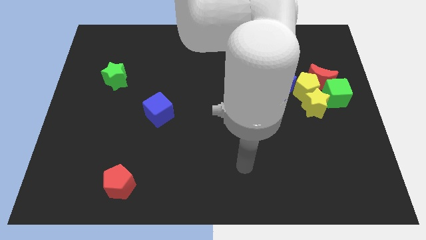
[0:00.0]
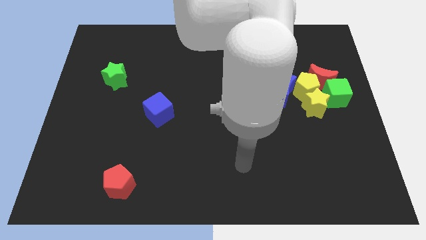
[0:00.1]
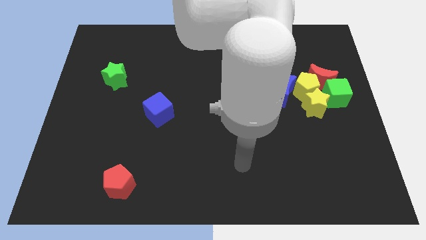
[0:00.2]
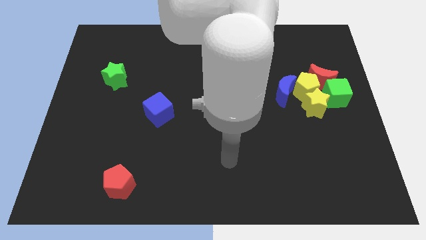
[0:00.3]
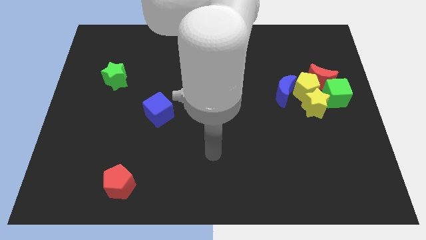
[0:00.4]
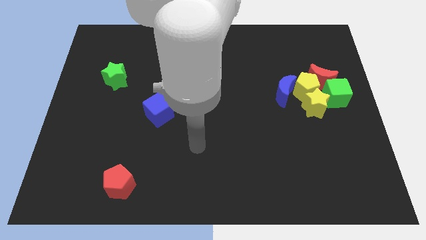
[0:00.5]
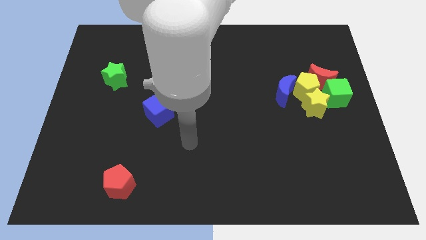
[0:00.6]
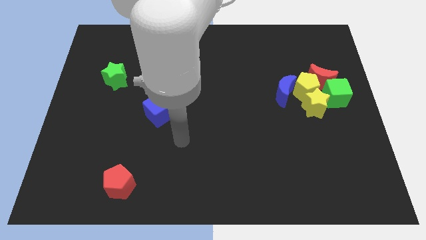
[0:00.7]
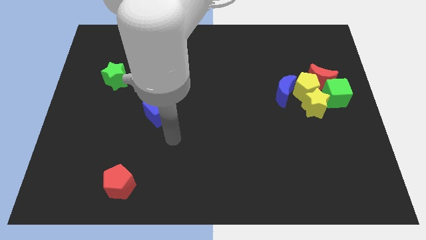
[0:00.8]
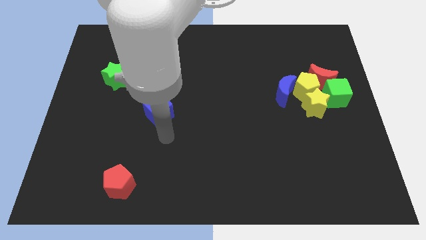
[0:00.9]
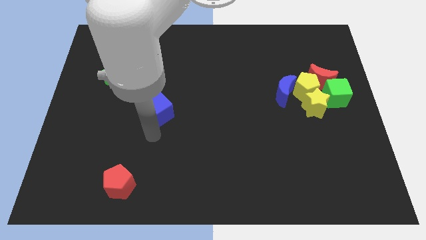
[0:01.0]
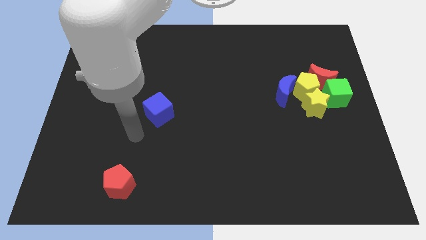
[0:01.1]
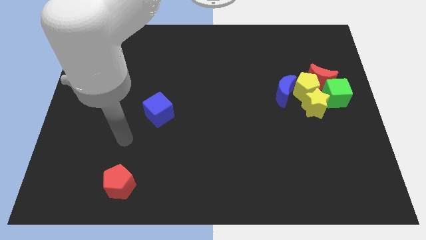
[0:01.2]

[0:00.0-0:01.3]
move the arm in between the blue cube and the red pentagon

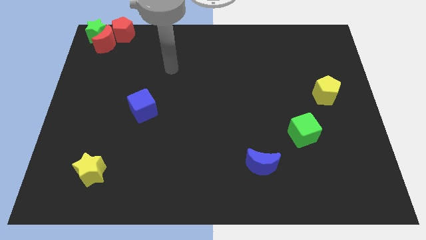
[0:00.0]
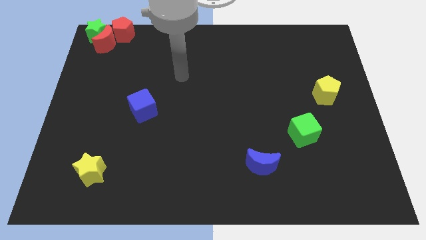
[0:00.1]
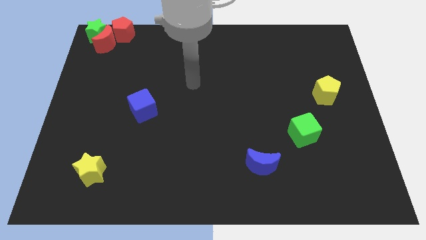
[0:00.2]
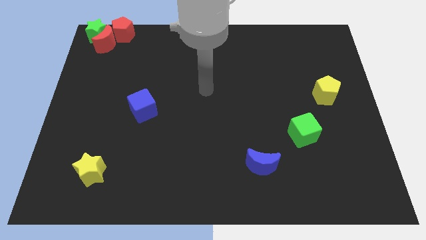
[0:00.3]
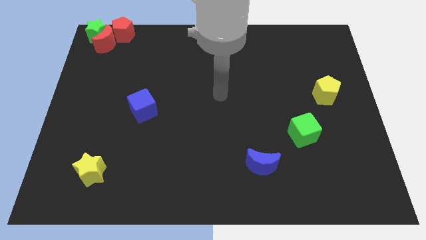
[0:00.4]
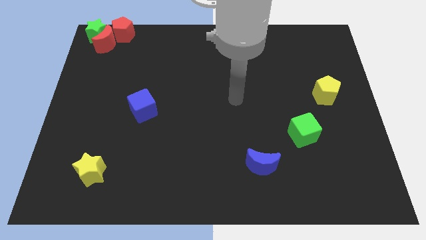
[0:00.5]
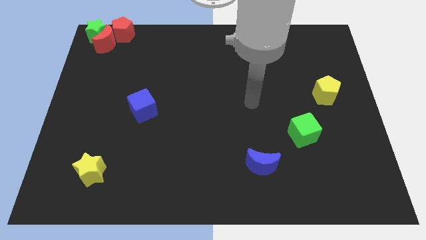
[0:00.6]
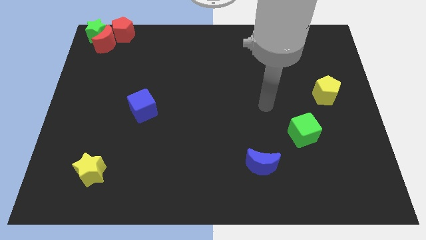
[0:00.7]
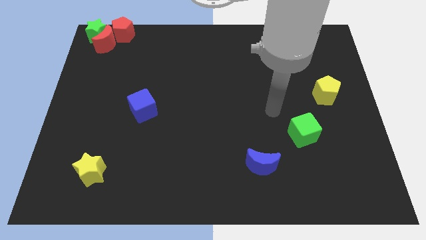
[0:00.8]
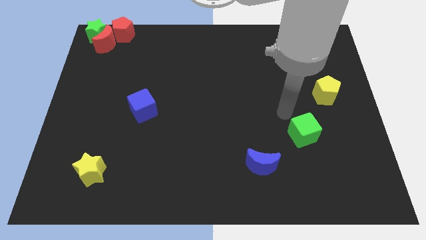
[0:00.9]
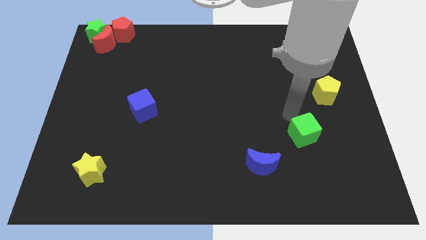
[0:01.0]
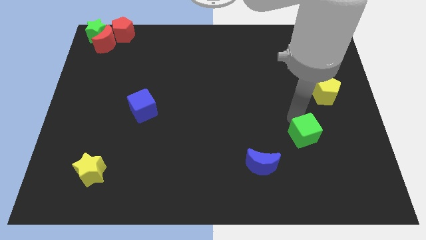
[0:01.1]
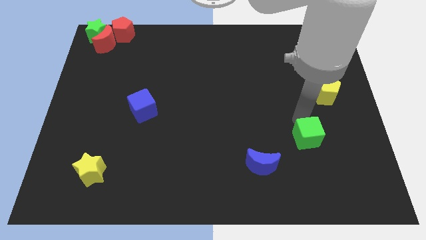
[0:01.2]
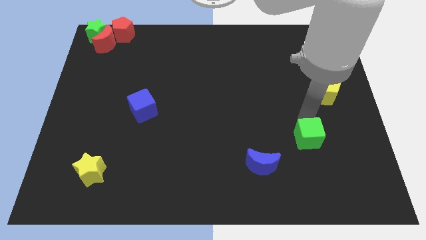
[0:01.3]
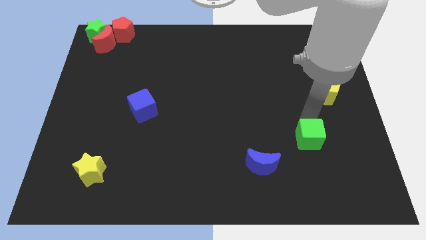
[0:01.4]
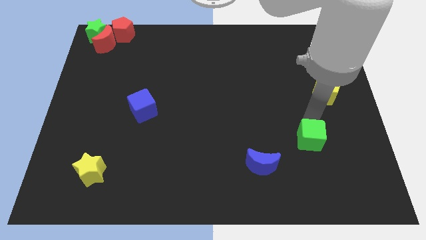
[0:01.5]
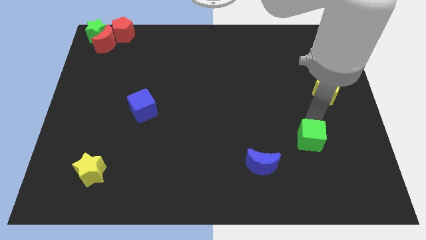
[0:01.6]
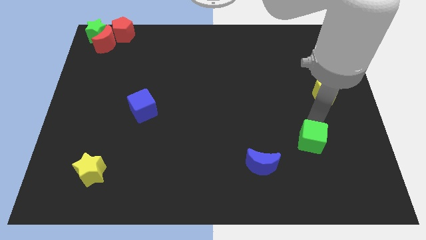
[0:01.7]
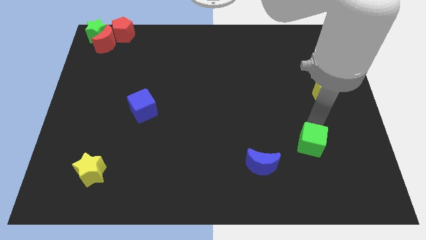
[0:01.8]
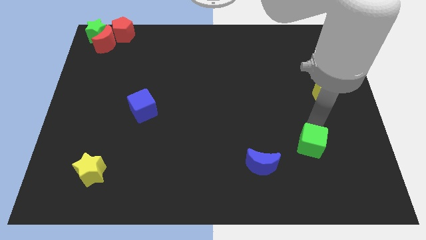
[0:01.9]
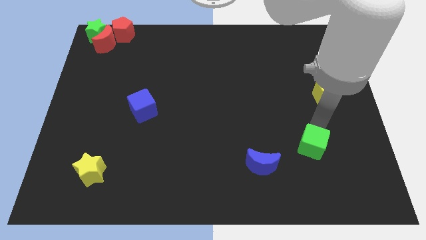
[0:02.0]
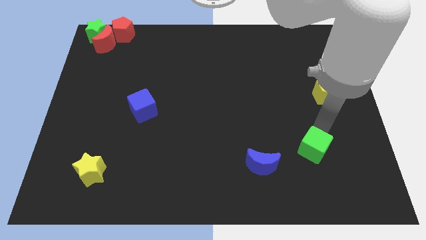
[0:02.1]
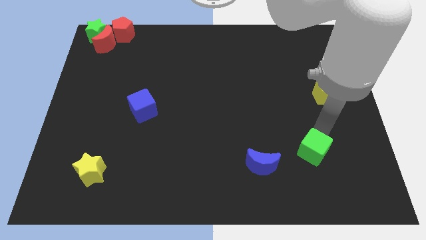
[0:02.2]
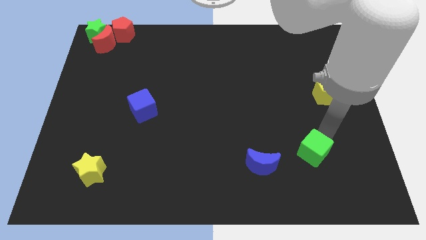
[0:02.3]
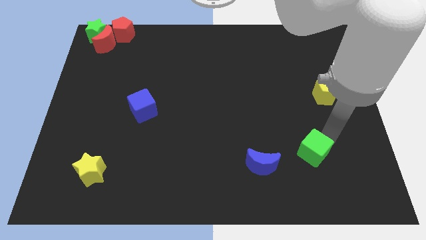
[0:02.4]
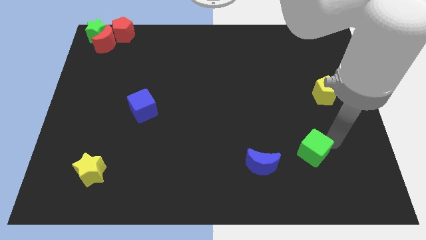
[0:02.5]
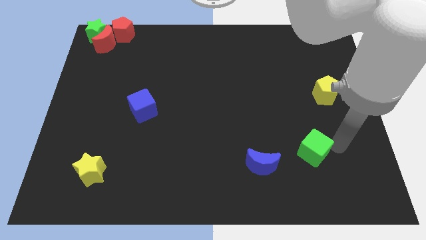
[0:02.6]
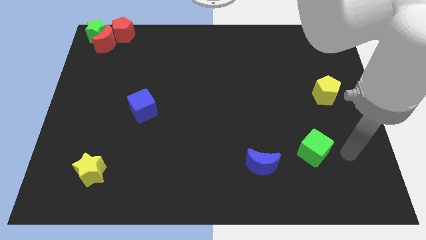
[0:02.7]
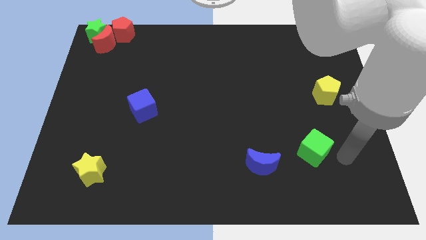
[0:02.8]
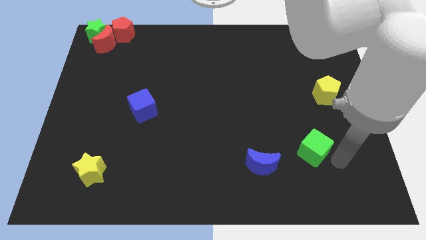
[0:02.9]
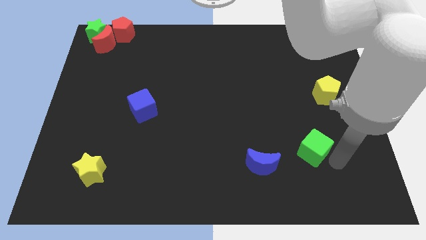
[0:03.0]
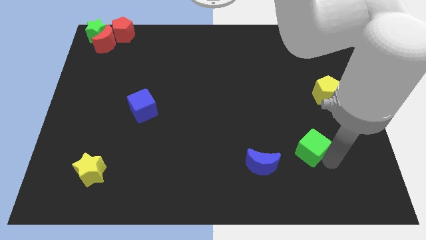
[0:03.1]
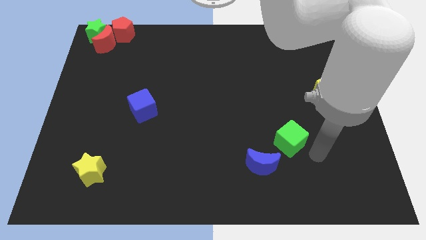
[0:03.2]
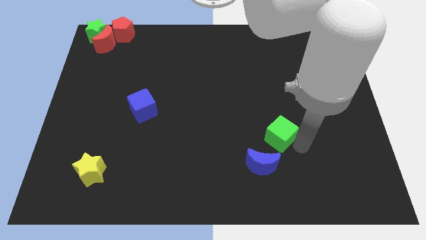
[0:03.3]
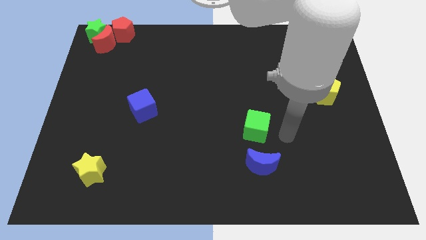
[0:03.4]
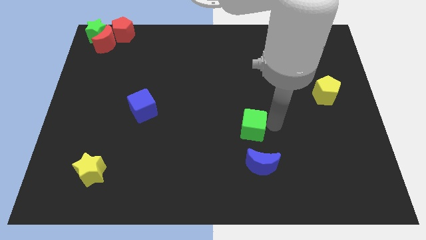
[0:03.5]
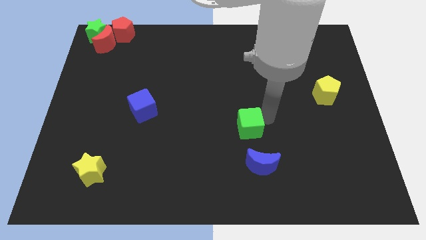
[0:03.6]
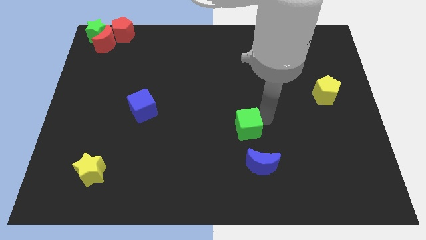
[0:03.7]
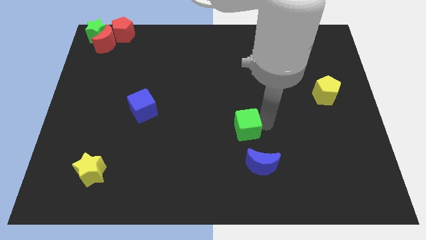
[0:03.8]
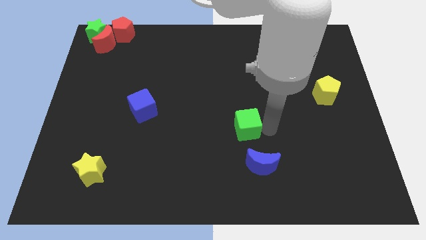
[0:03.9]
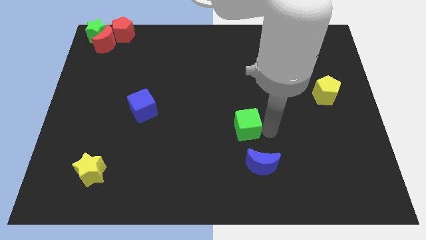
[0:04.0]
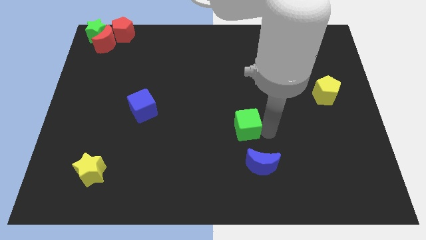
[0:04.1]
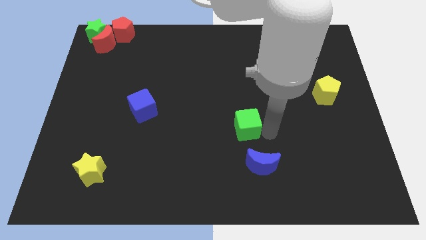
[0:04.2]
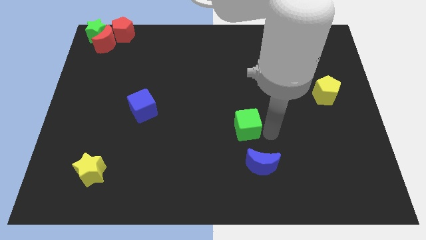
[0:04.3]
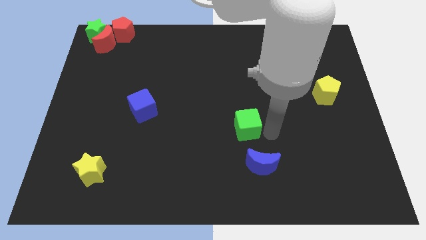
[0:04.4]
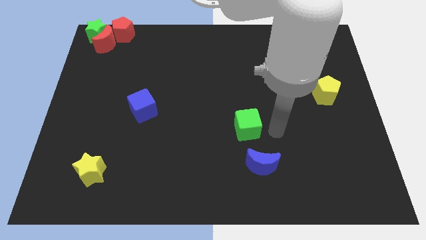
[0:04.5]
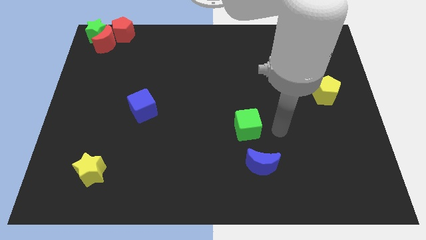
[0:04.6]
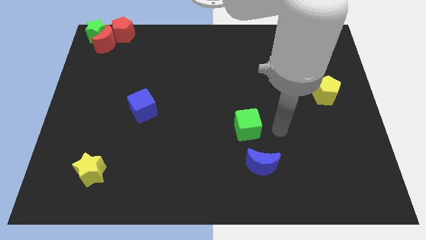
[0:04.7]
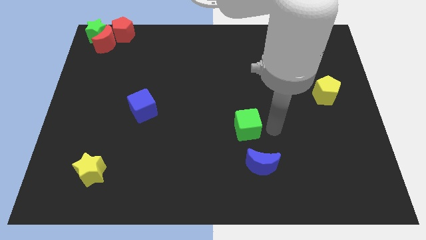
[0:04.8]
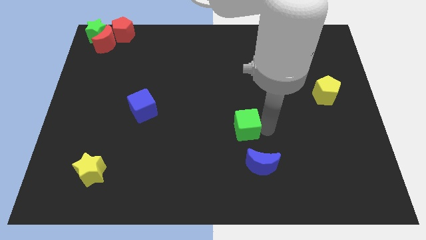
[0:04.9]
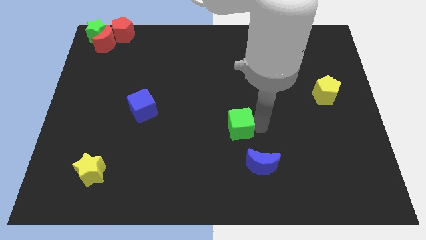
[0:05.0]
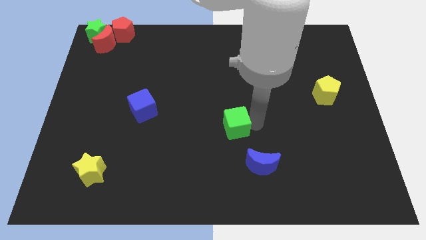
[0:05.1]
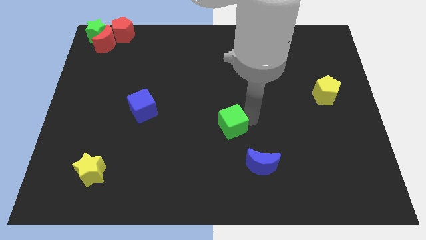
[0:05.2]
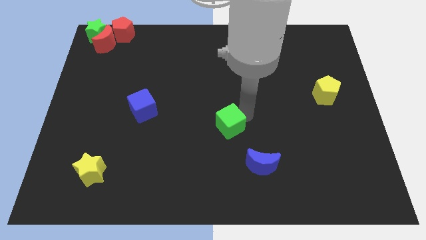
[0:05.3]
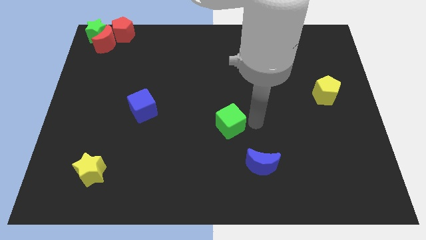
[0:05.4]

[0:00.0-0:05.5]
place the green cube diagonally above the blue crescent

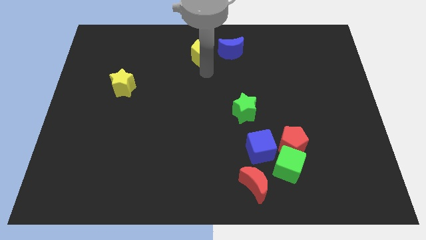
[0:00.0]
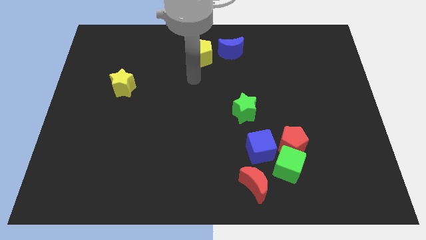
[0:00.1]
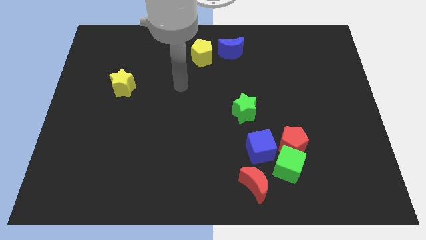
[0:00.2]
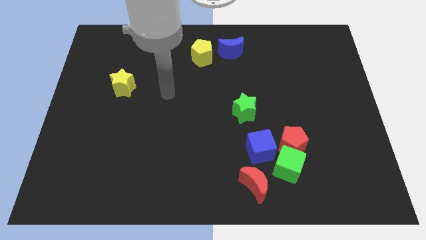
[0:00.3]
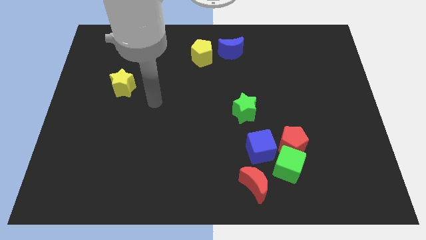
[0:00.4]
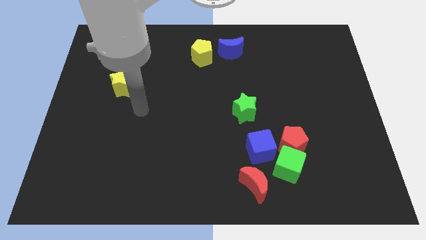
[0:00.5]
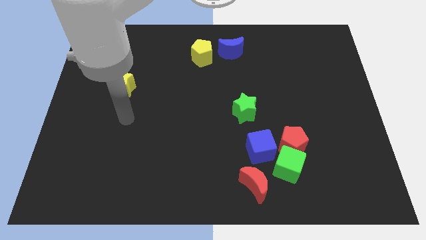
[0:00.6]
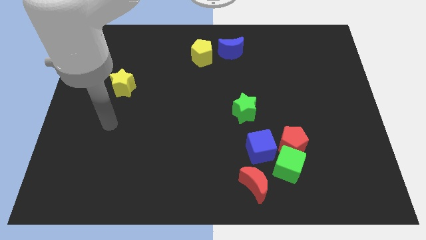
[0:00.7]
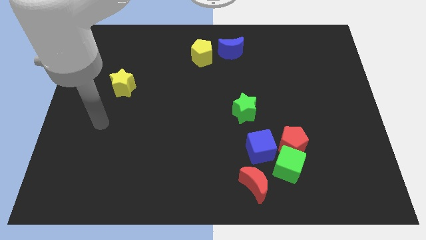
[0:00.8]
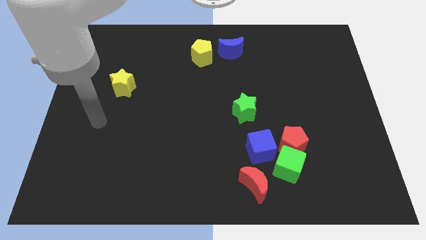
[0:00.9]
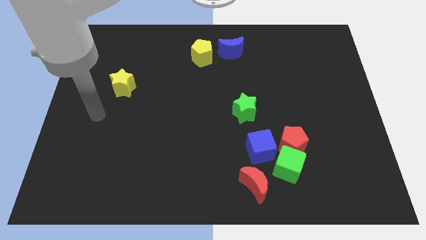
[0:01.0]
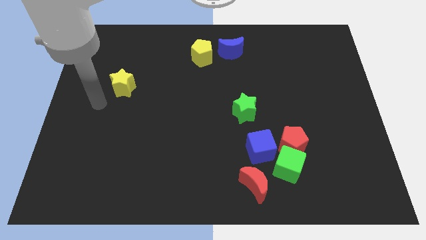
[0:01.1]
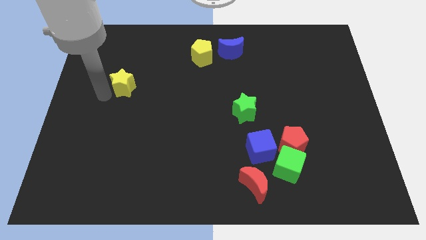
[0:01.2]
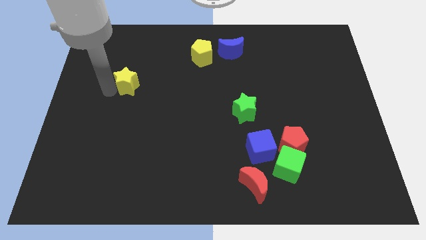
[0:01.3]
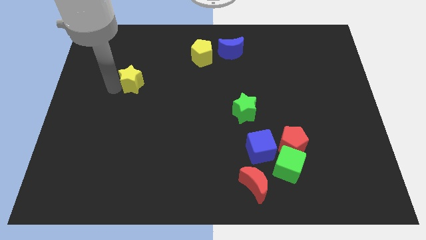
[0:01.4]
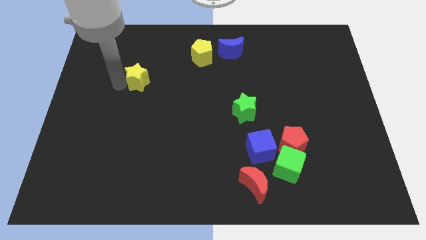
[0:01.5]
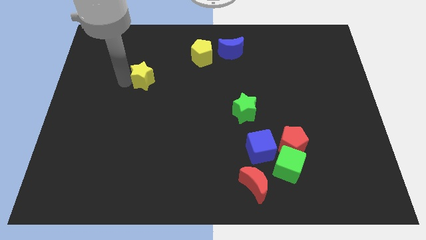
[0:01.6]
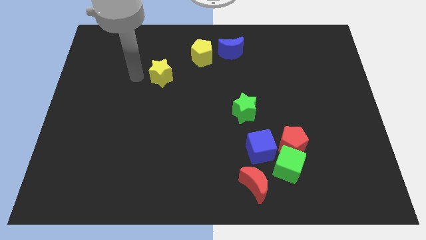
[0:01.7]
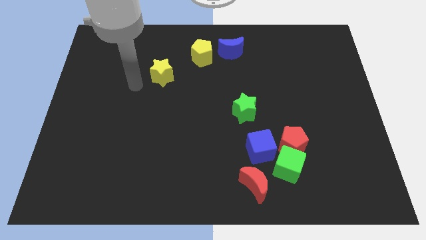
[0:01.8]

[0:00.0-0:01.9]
move the yellow star towards the yellow pentagon

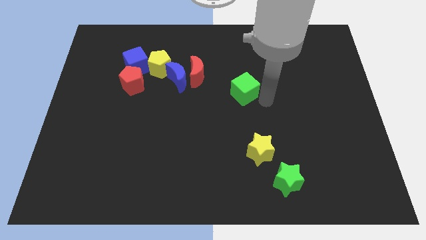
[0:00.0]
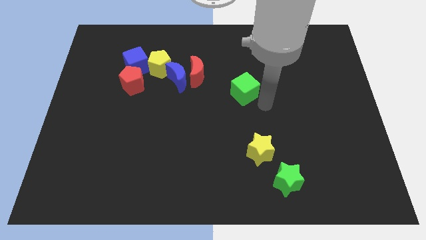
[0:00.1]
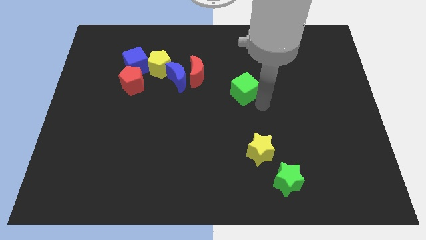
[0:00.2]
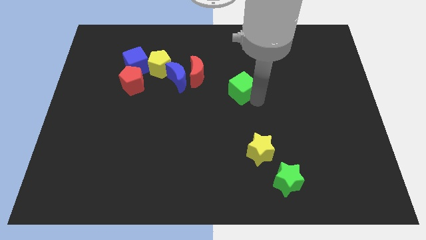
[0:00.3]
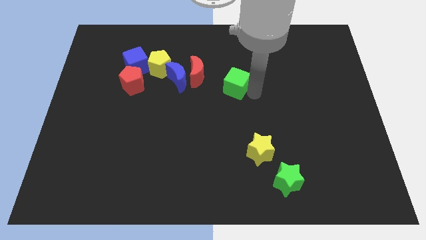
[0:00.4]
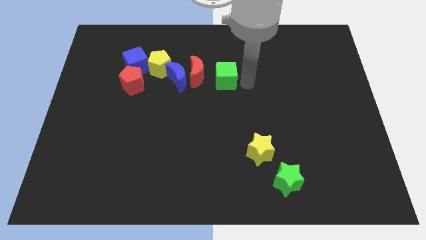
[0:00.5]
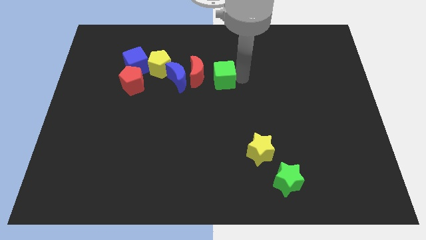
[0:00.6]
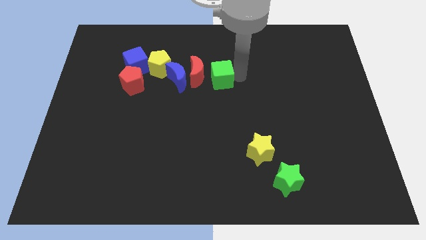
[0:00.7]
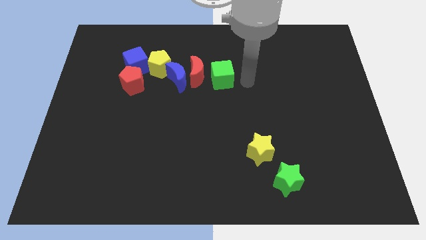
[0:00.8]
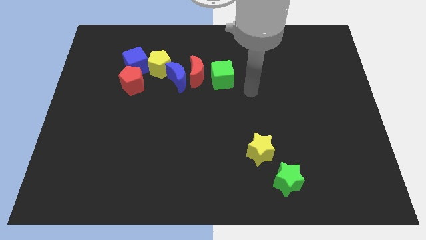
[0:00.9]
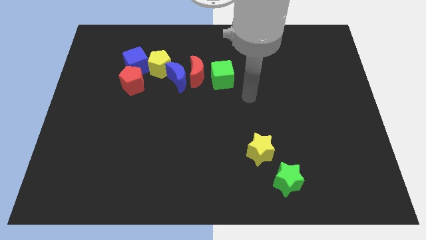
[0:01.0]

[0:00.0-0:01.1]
push the green cube to the right of the red crescent
